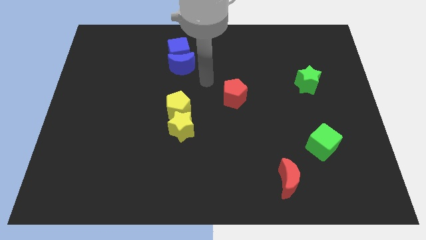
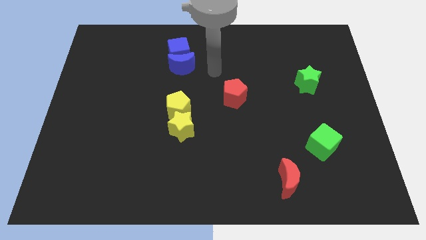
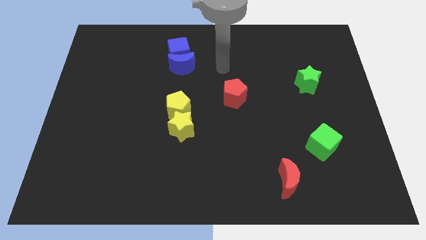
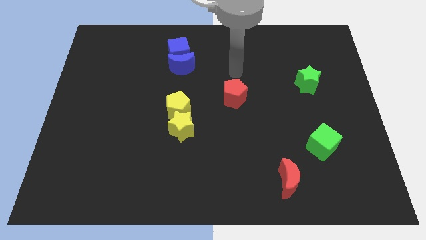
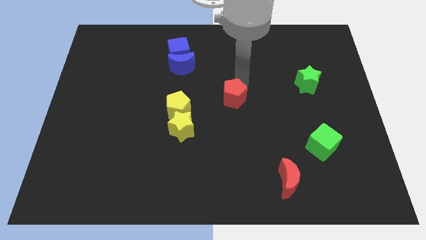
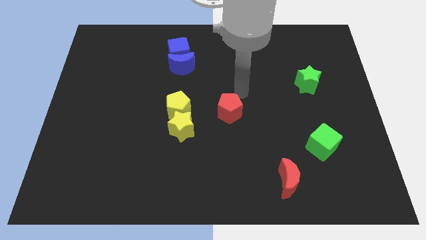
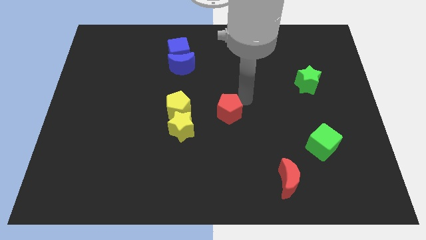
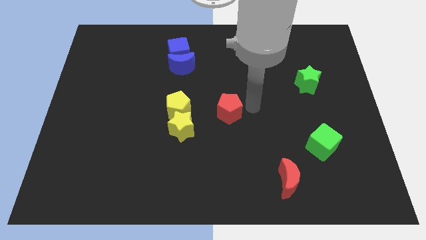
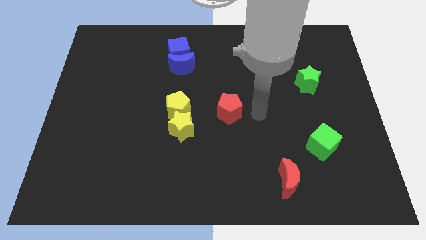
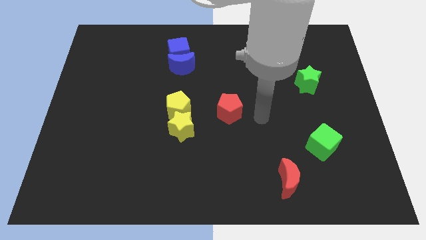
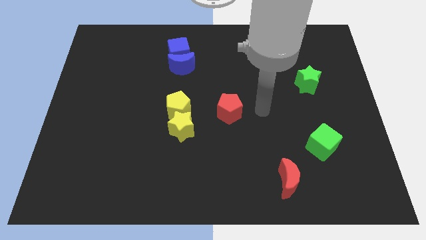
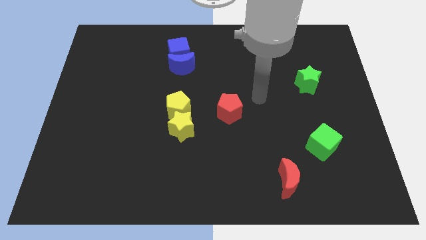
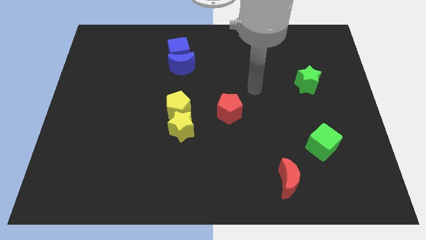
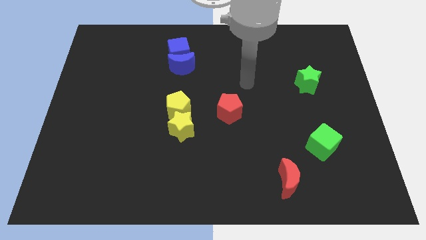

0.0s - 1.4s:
push the red pentagon to the right of the yellow blocks

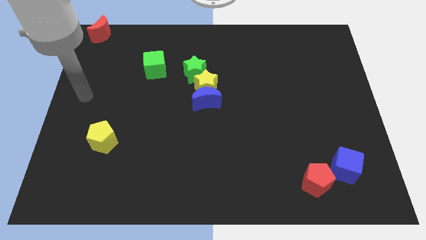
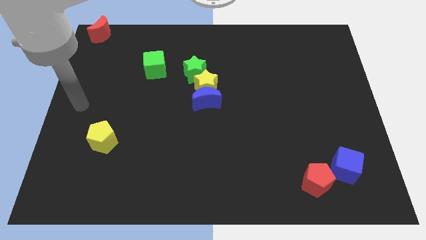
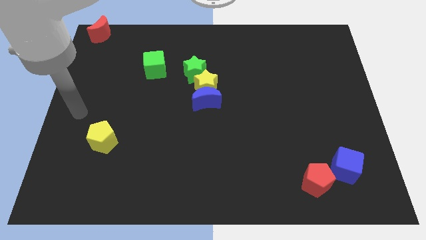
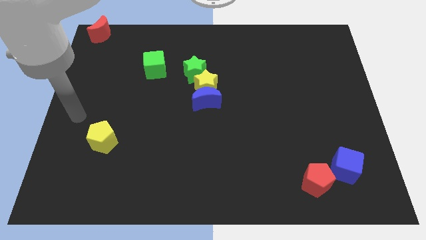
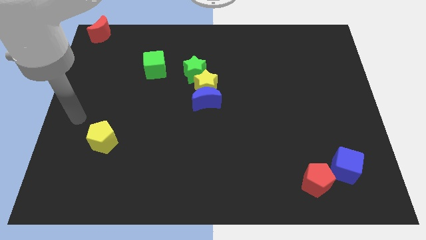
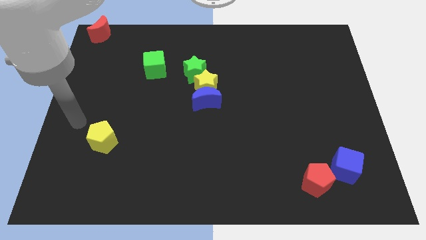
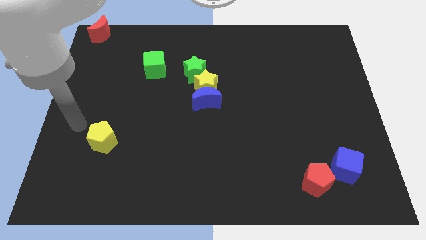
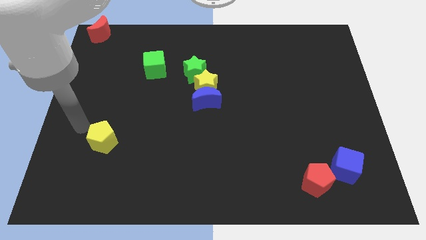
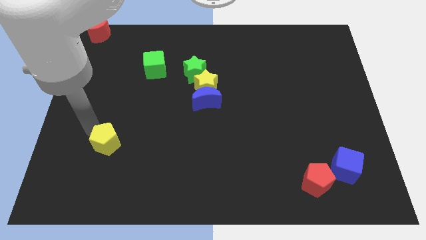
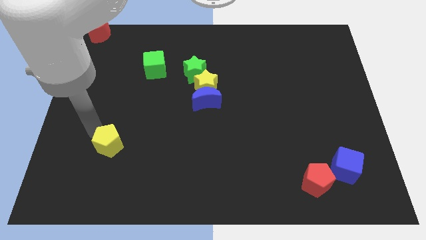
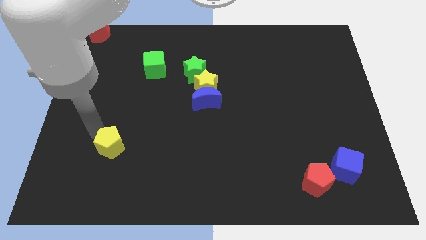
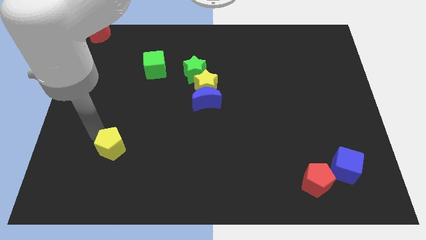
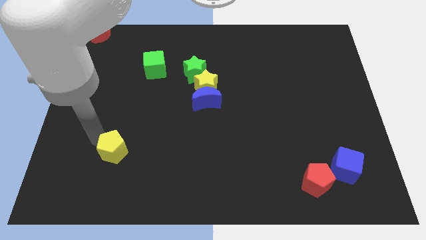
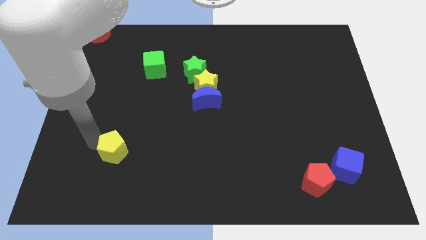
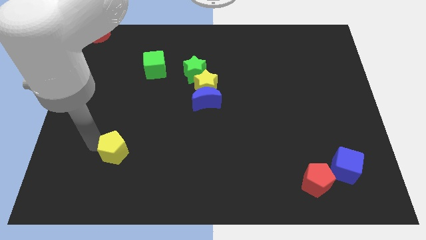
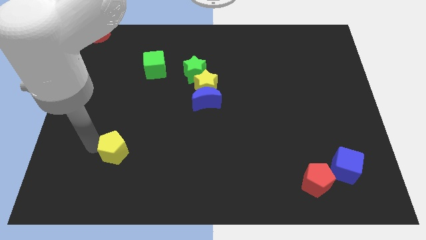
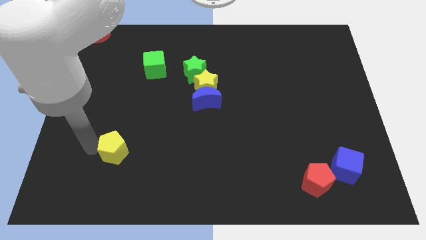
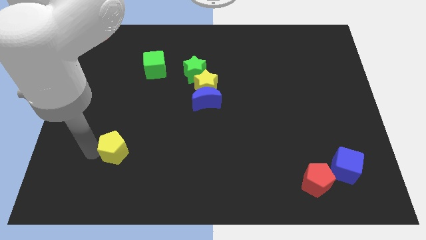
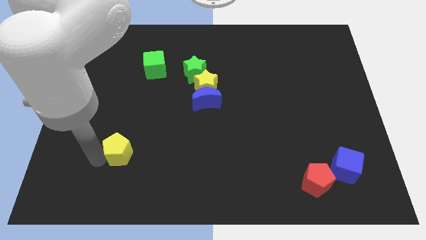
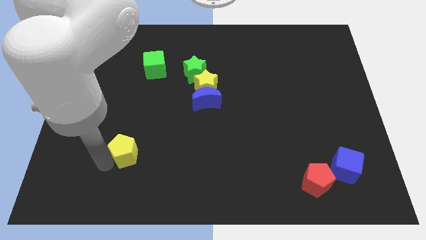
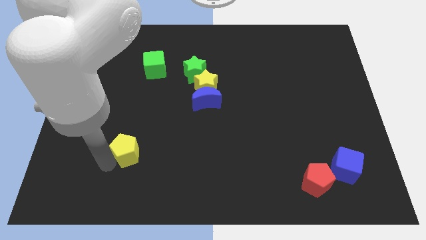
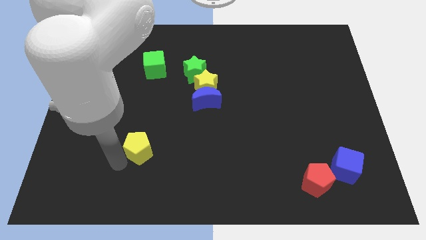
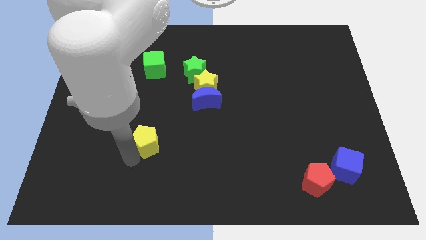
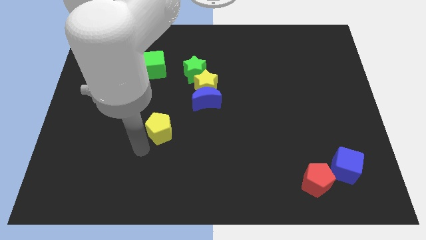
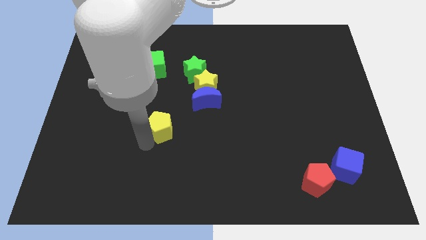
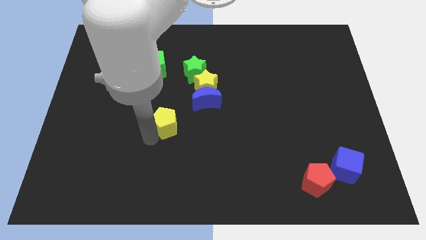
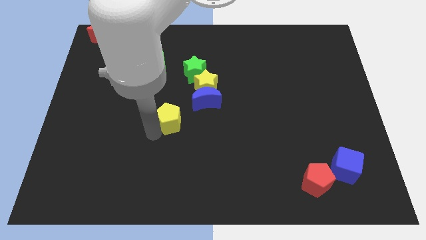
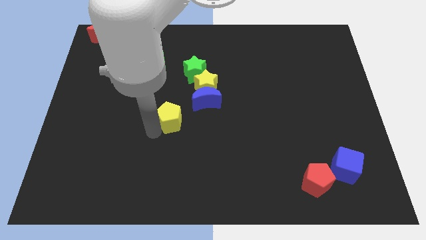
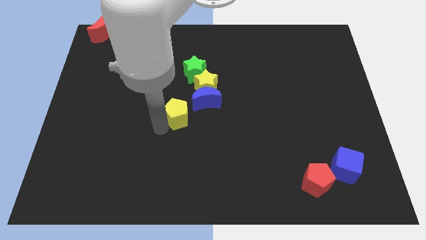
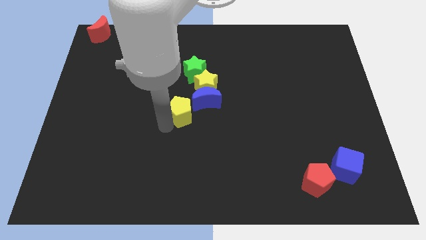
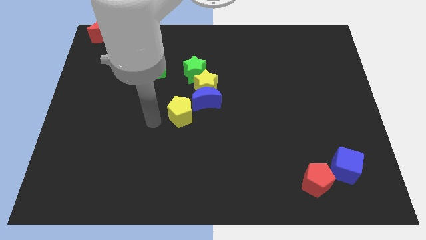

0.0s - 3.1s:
move the yellow pentagon diagonal left of the blue moon

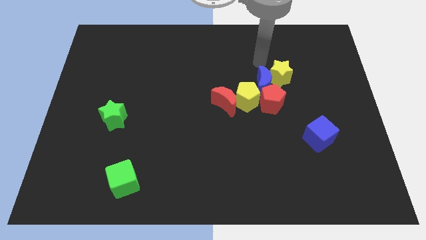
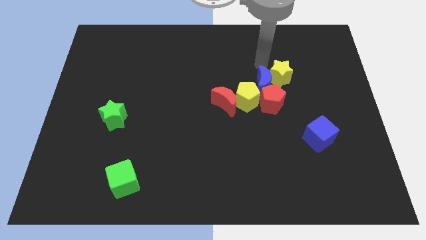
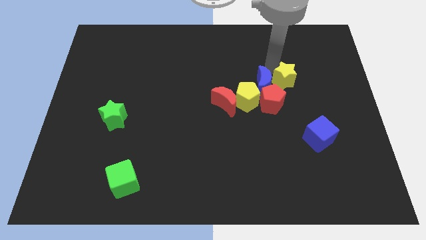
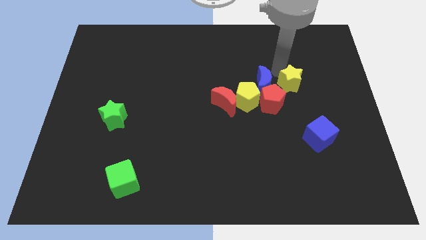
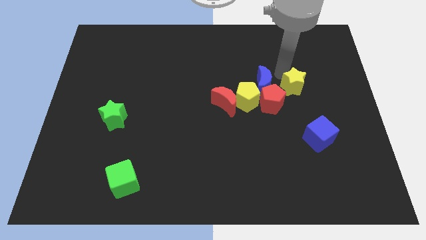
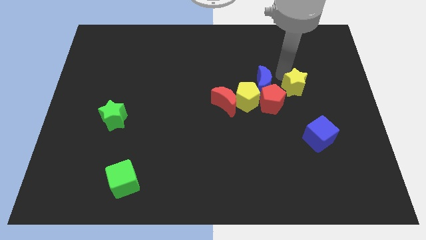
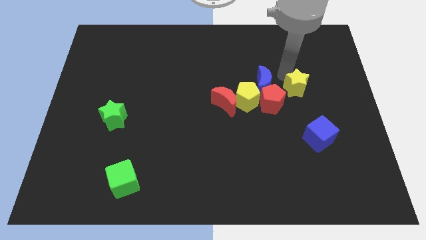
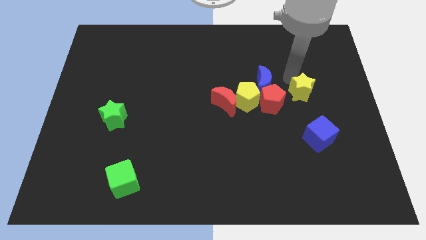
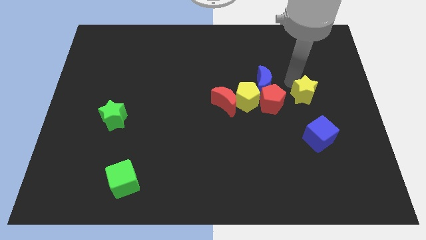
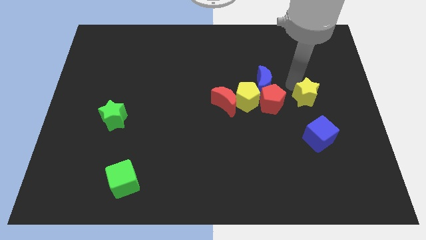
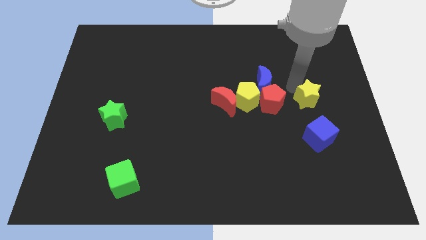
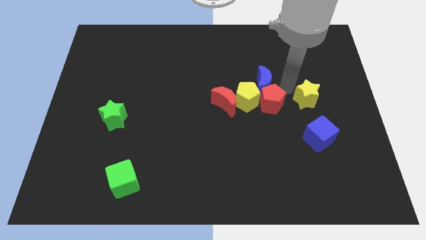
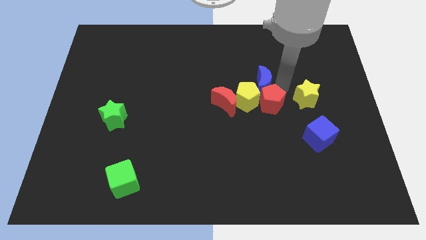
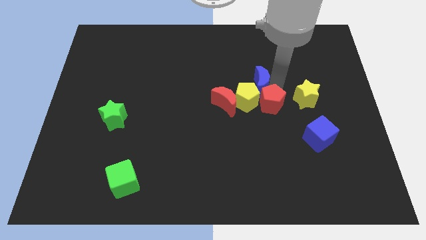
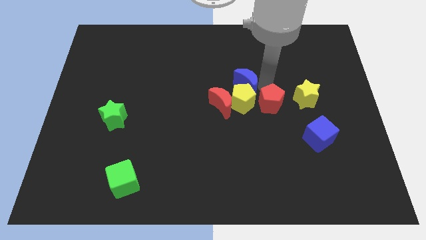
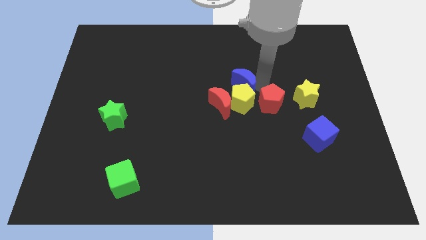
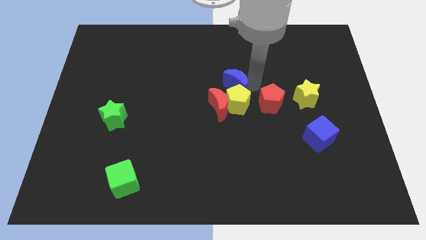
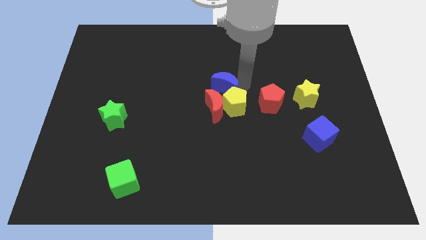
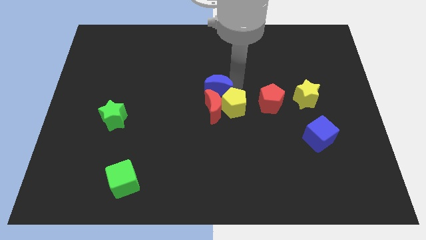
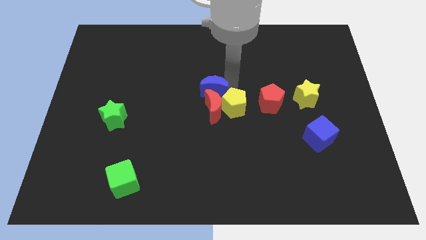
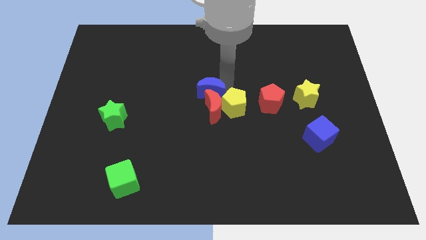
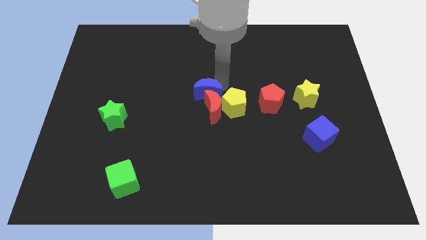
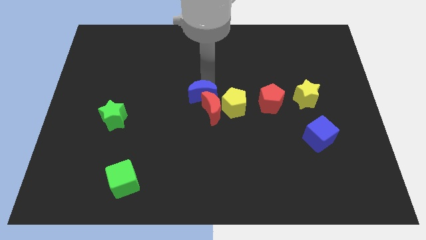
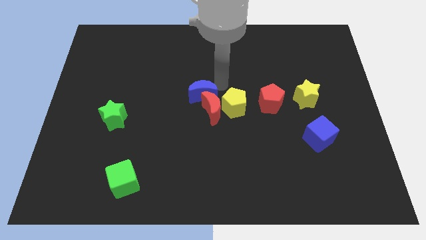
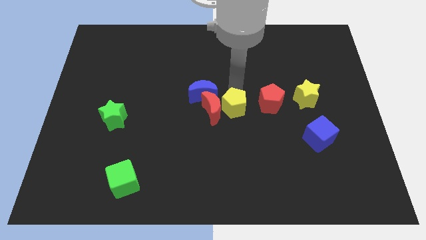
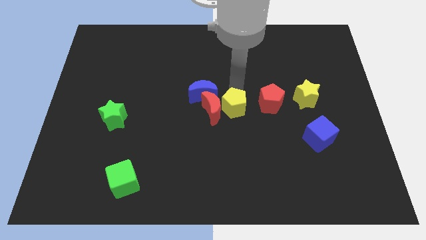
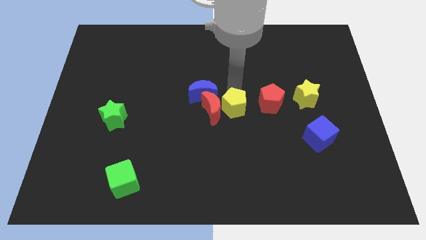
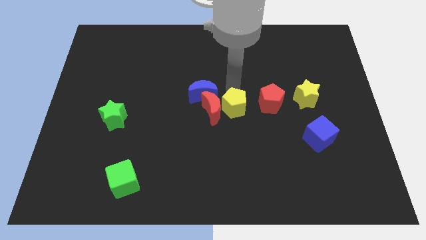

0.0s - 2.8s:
place the yellow star to the right of the red pentagon

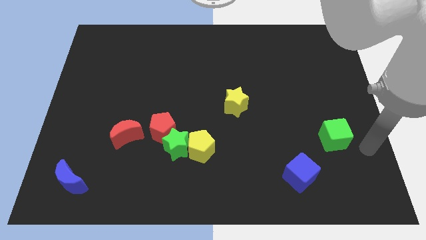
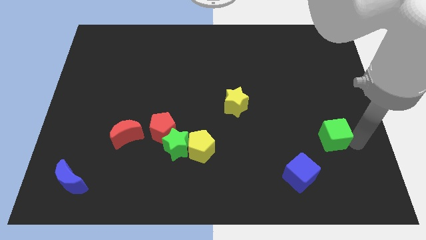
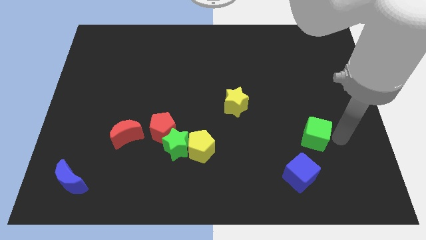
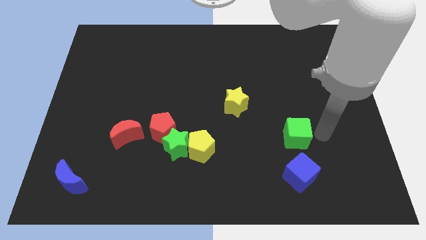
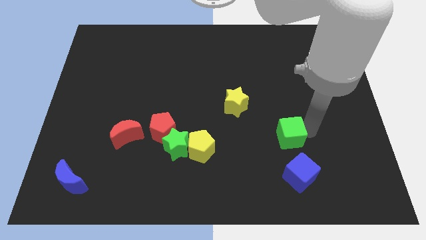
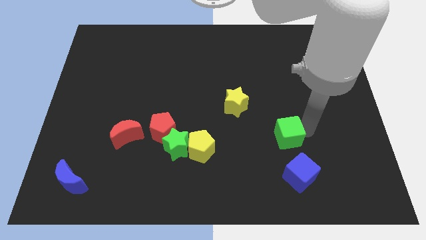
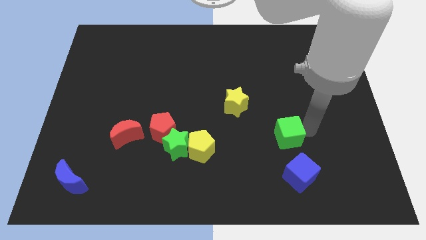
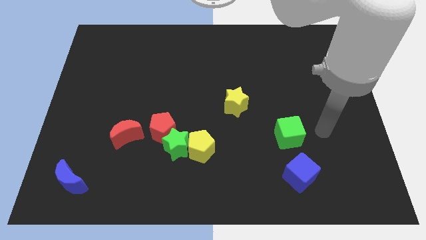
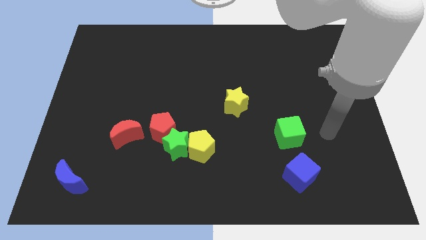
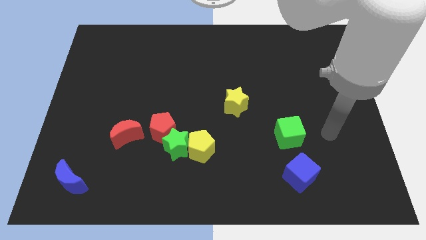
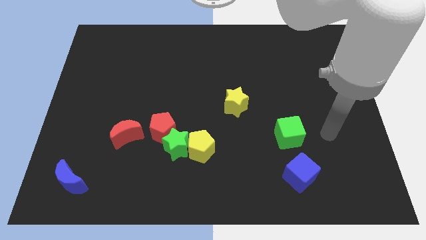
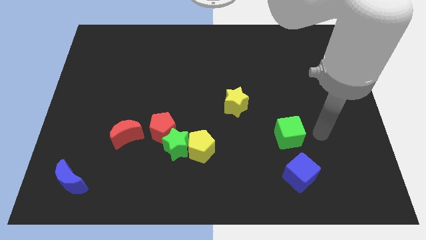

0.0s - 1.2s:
push the green cube to the left of the board

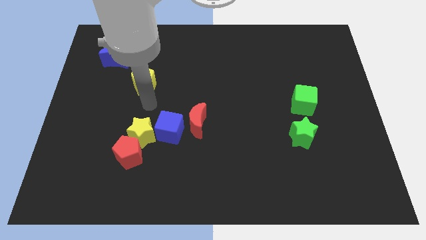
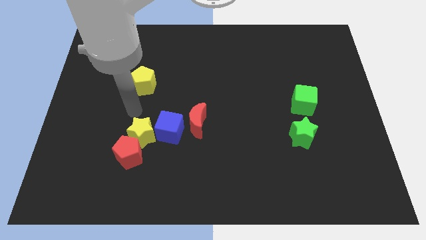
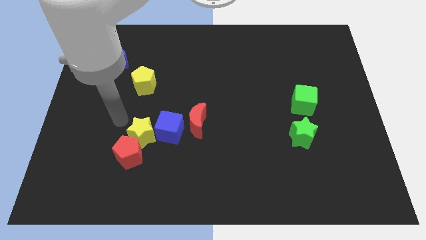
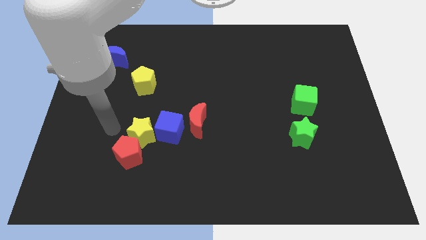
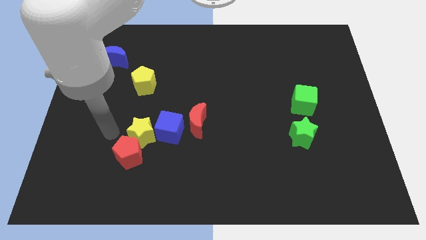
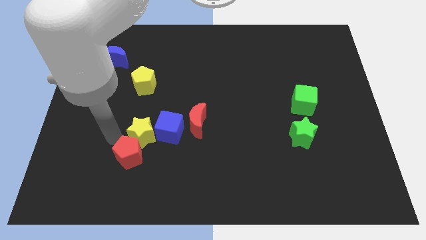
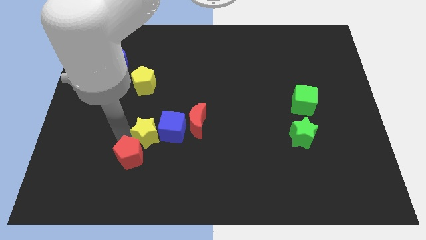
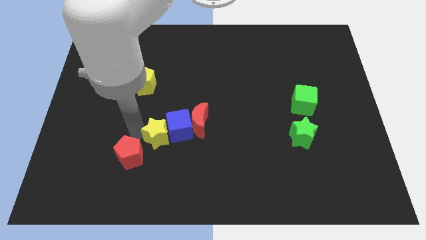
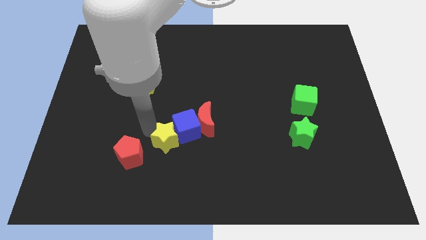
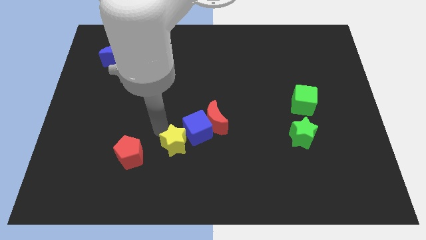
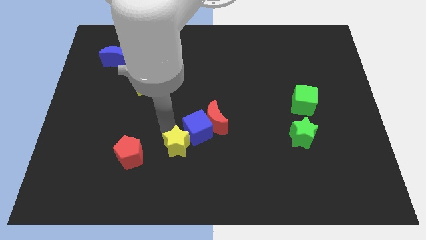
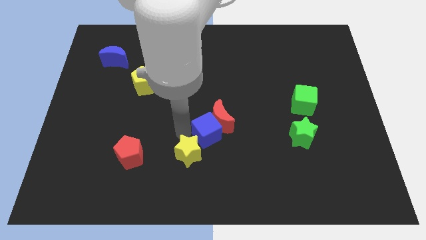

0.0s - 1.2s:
separate yellow star and the red pentagon
